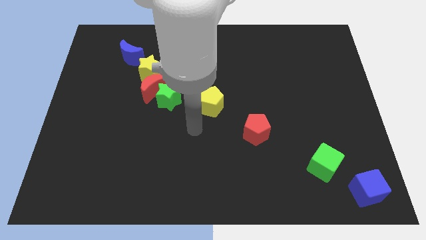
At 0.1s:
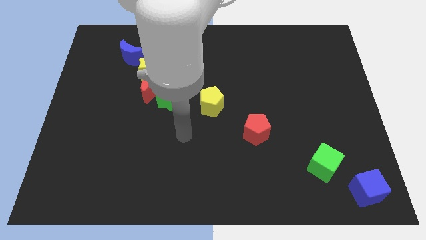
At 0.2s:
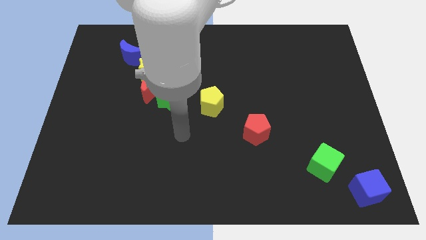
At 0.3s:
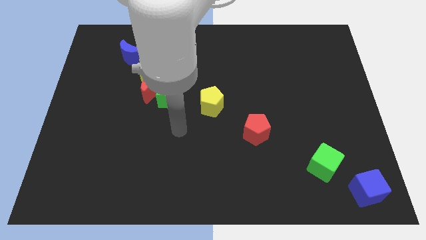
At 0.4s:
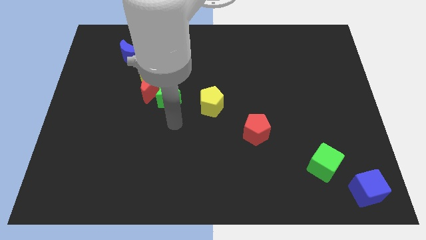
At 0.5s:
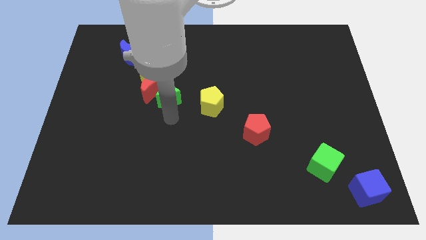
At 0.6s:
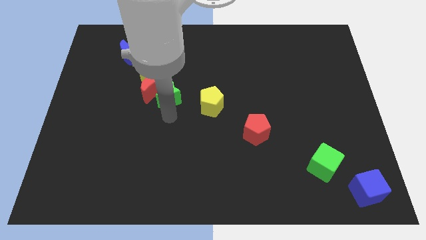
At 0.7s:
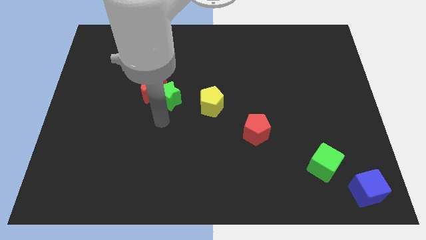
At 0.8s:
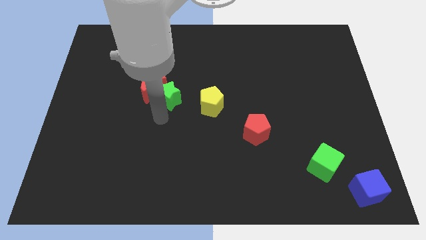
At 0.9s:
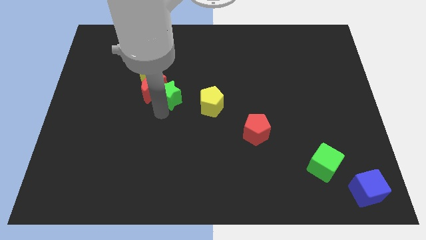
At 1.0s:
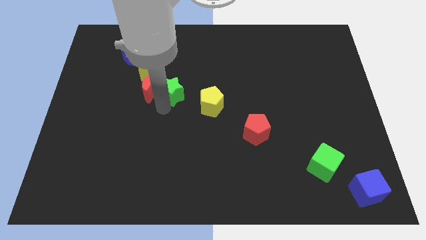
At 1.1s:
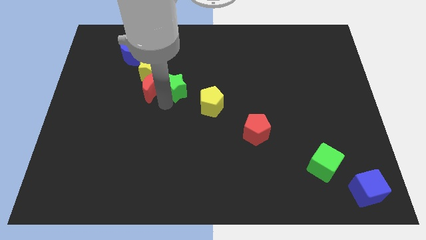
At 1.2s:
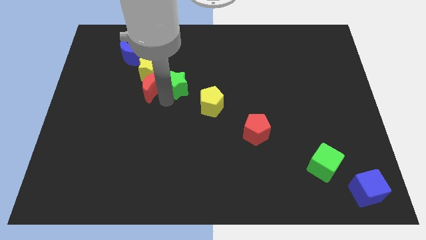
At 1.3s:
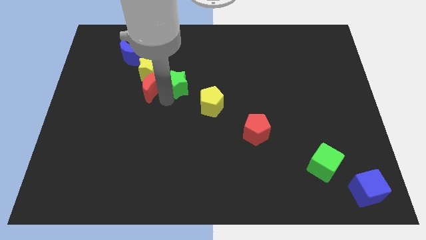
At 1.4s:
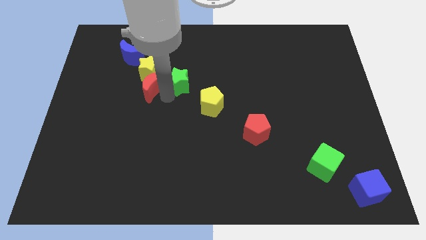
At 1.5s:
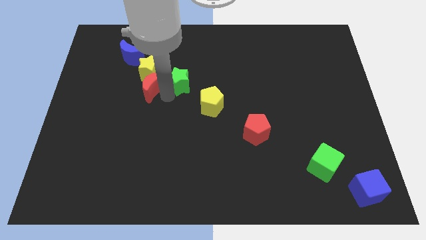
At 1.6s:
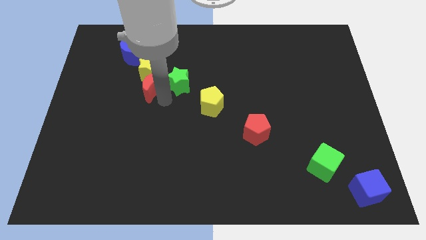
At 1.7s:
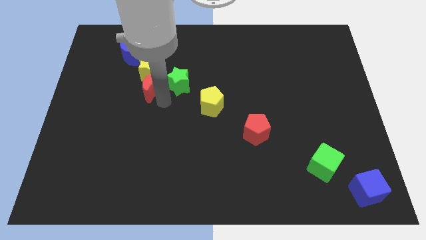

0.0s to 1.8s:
separate the green star from the red moon

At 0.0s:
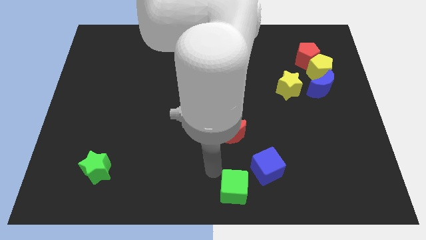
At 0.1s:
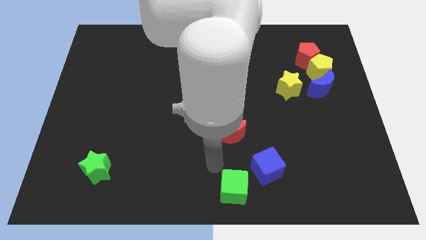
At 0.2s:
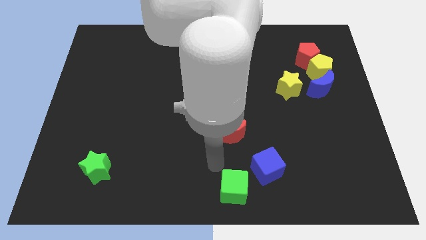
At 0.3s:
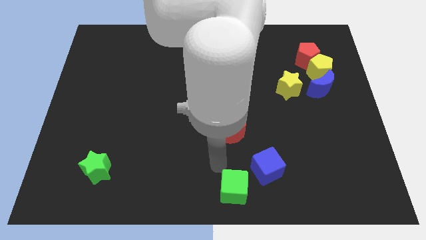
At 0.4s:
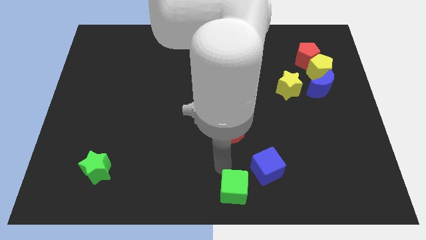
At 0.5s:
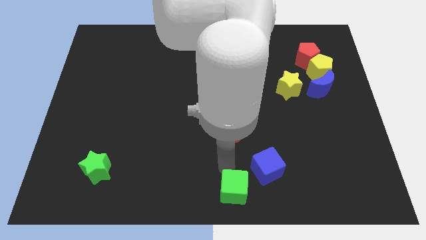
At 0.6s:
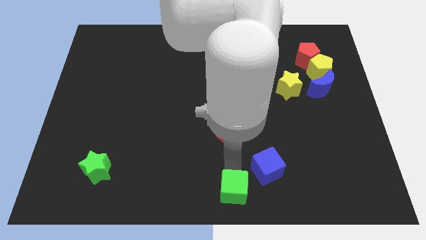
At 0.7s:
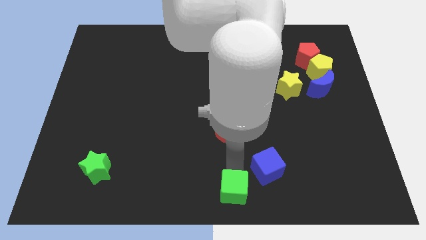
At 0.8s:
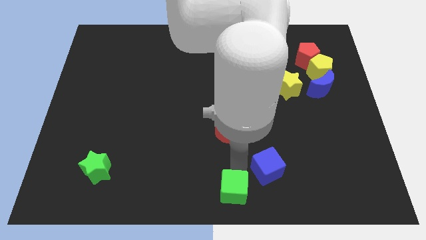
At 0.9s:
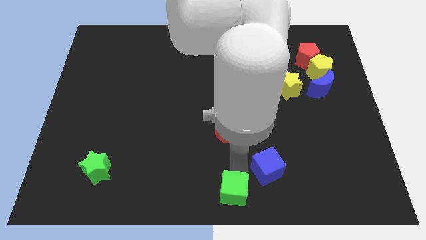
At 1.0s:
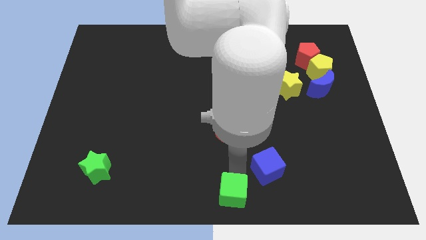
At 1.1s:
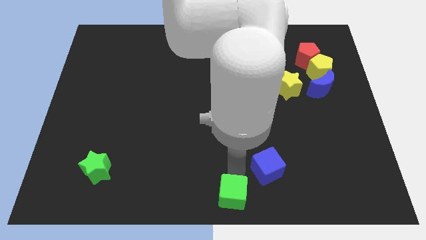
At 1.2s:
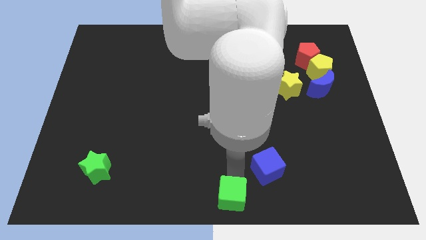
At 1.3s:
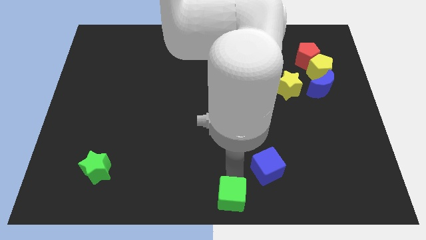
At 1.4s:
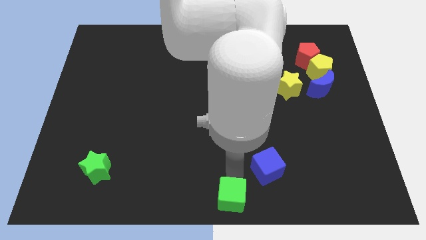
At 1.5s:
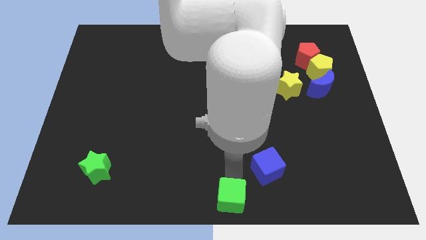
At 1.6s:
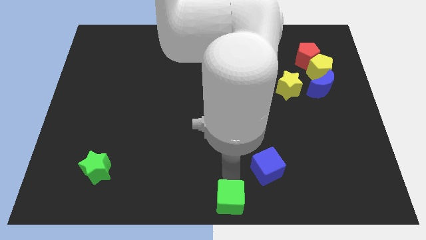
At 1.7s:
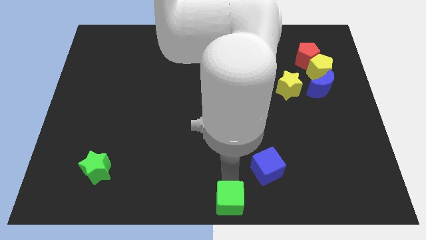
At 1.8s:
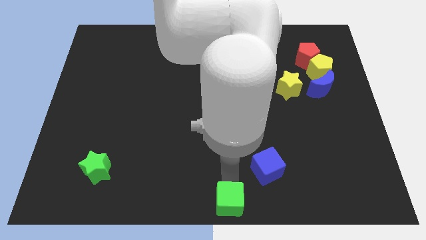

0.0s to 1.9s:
move the green cube to the middle of the board

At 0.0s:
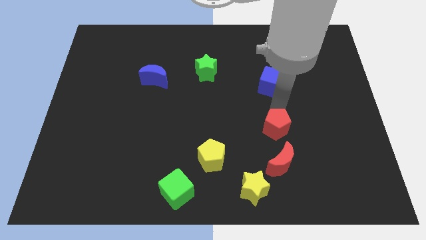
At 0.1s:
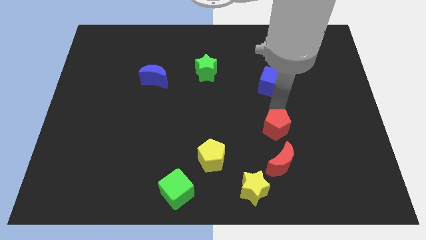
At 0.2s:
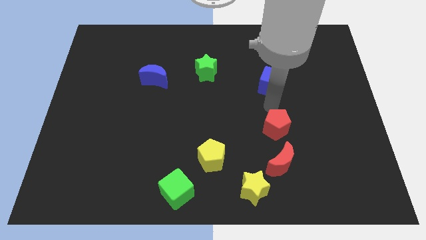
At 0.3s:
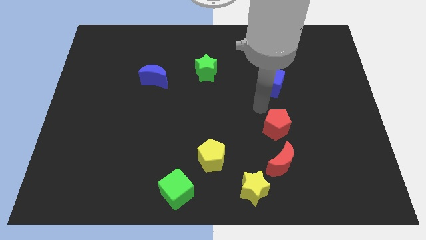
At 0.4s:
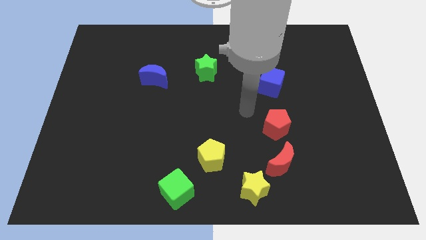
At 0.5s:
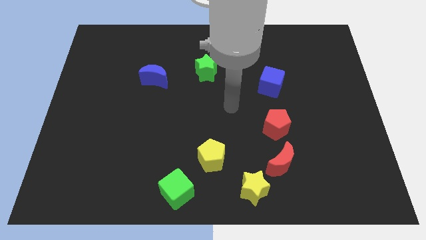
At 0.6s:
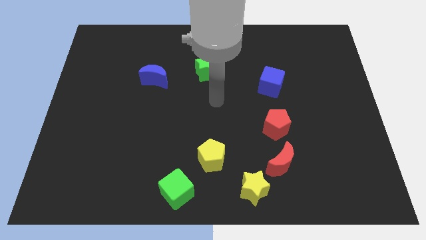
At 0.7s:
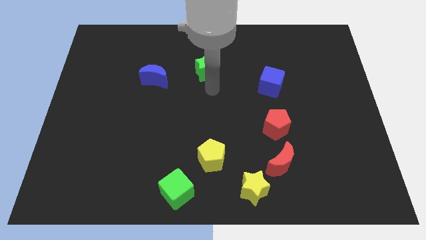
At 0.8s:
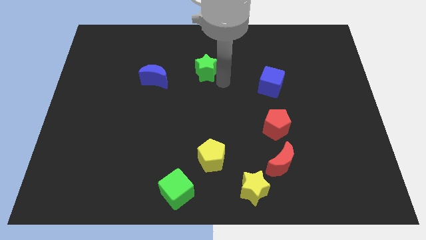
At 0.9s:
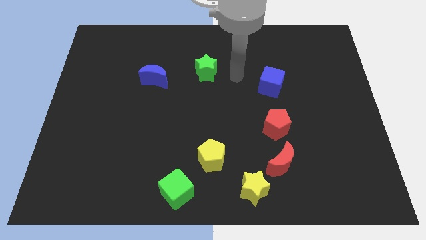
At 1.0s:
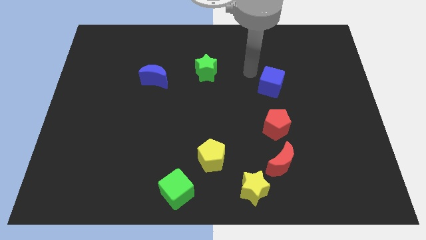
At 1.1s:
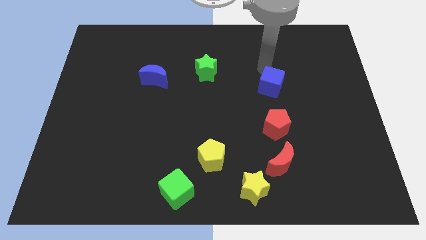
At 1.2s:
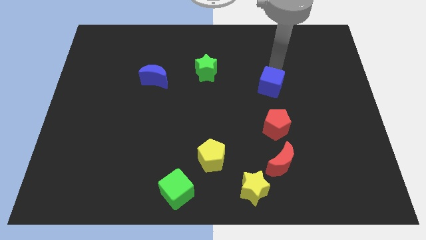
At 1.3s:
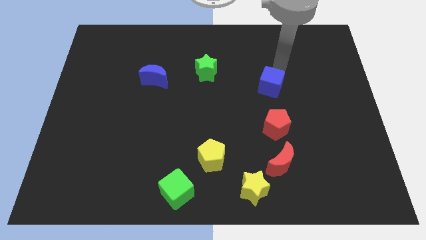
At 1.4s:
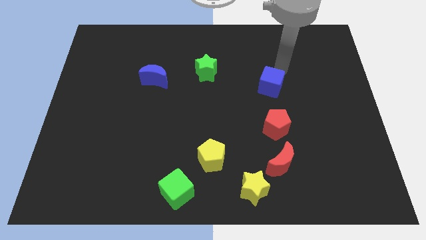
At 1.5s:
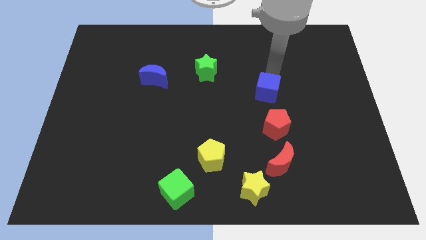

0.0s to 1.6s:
move your arm to the blue cube

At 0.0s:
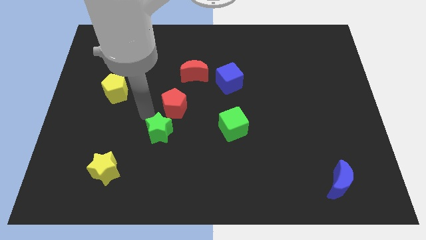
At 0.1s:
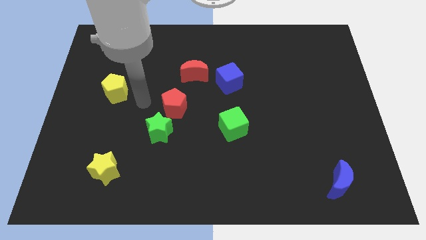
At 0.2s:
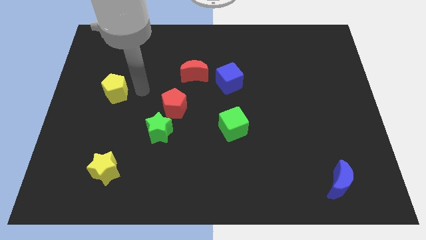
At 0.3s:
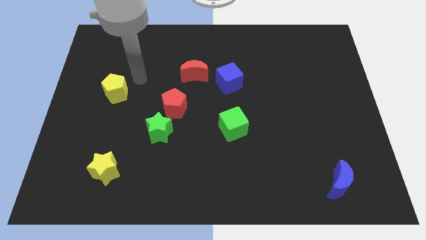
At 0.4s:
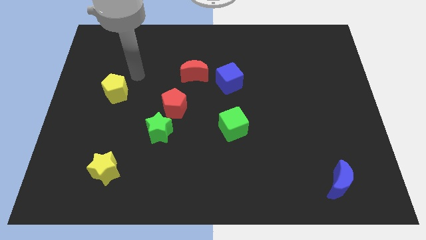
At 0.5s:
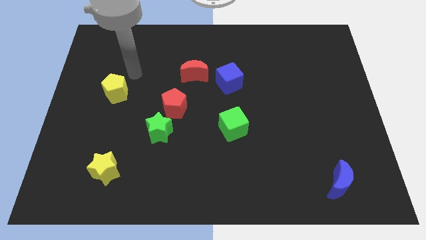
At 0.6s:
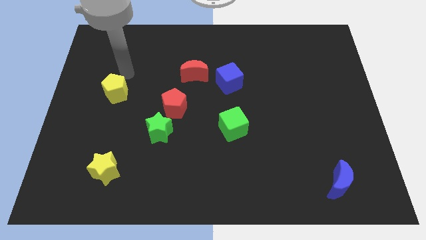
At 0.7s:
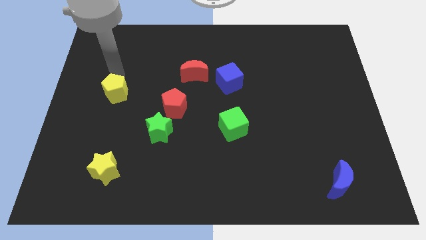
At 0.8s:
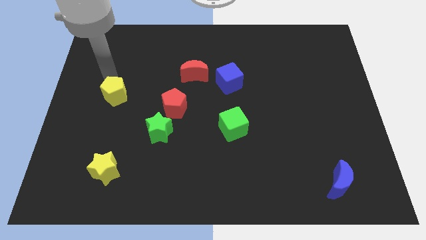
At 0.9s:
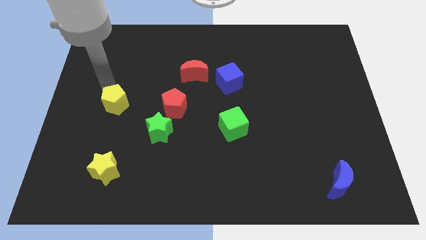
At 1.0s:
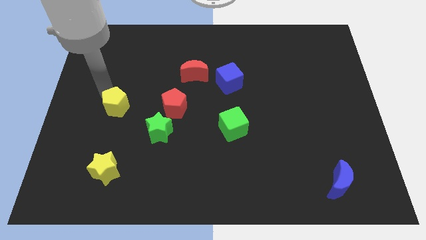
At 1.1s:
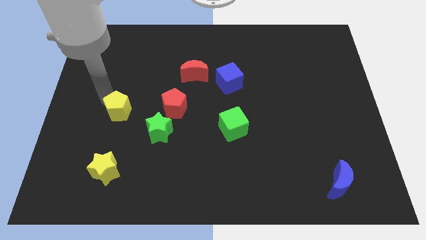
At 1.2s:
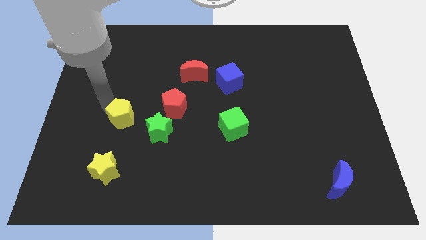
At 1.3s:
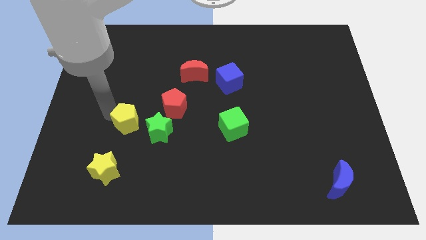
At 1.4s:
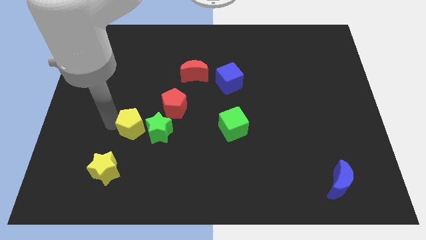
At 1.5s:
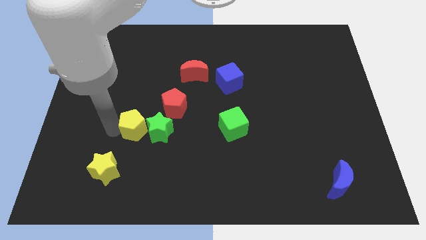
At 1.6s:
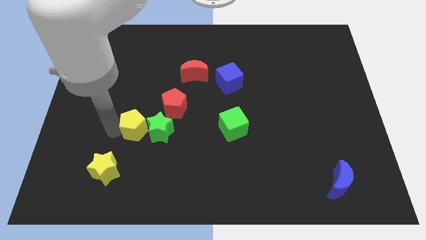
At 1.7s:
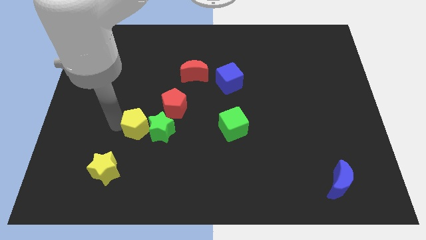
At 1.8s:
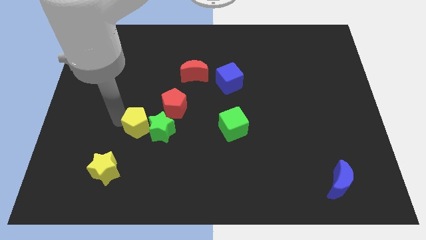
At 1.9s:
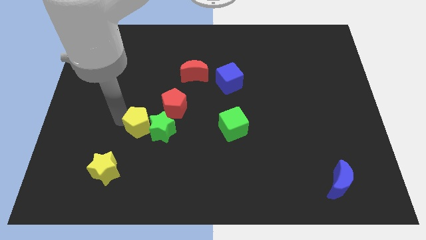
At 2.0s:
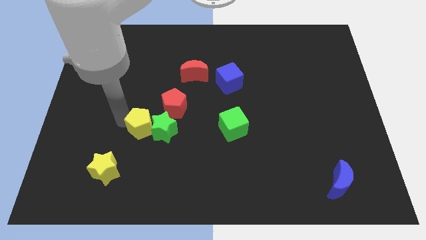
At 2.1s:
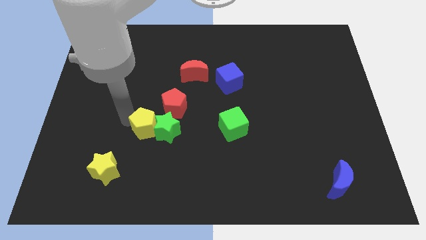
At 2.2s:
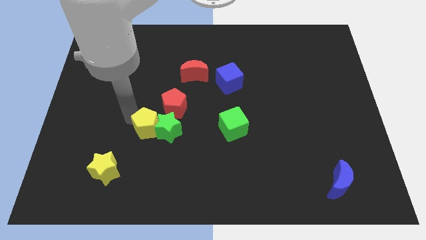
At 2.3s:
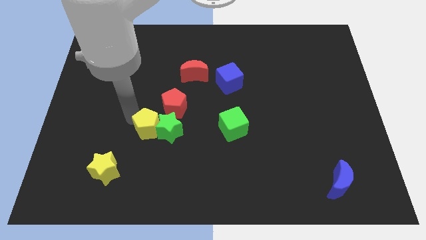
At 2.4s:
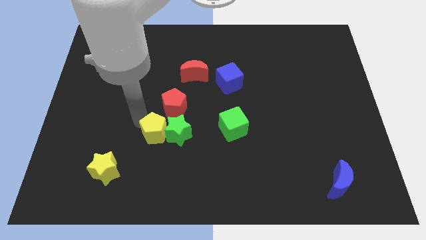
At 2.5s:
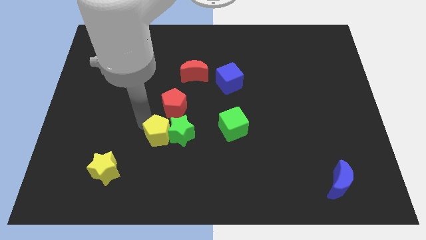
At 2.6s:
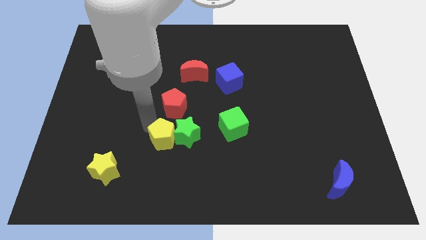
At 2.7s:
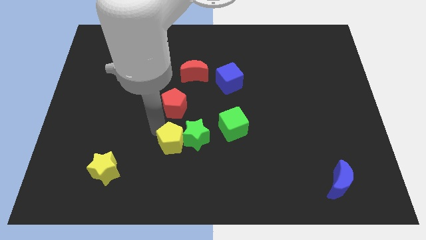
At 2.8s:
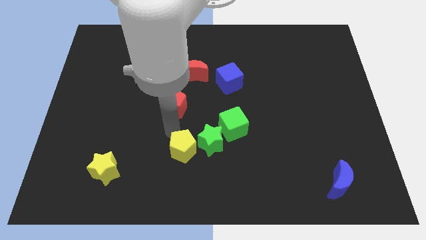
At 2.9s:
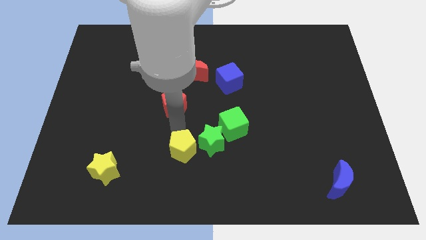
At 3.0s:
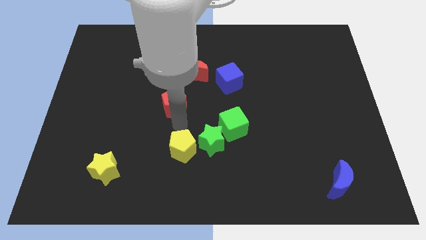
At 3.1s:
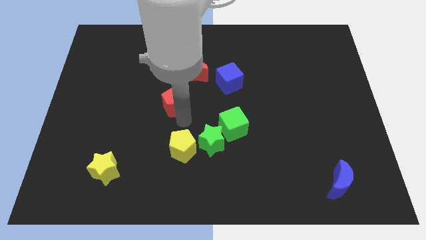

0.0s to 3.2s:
put the yellow pentagon on the left of the green star

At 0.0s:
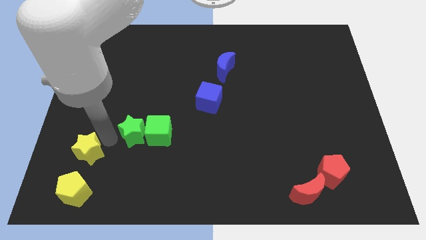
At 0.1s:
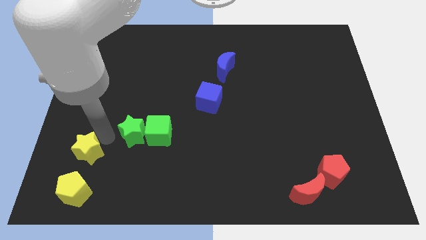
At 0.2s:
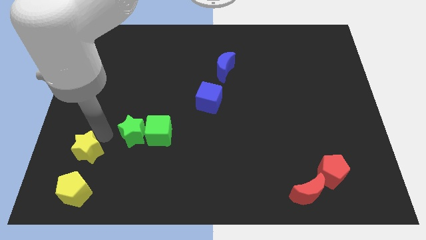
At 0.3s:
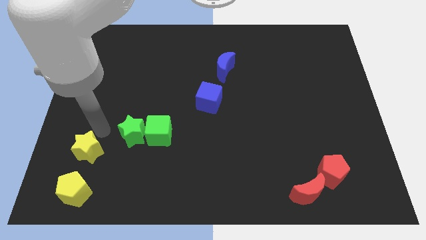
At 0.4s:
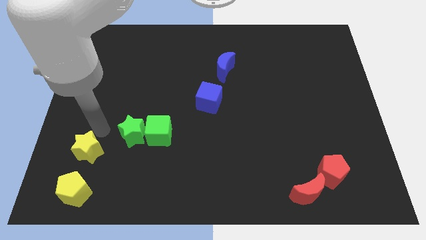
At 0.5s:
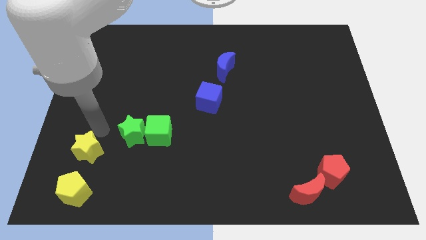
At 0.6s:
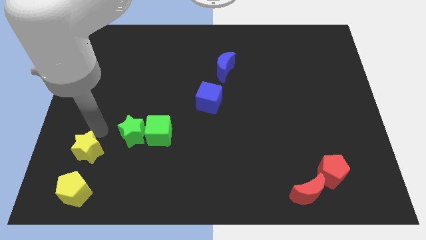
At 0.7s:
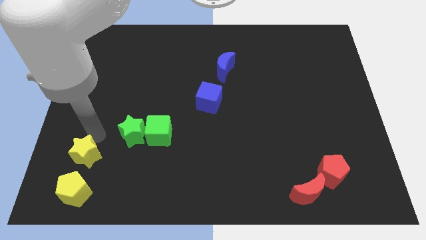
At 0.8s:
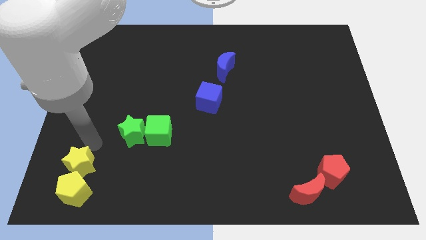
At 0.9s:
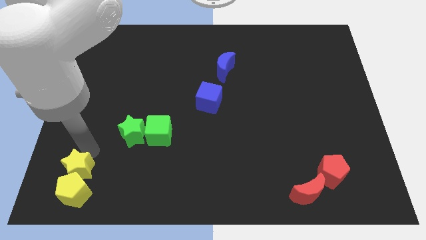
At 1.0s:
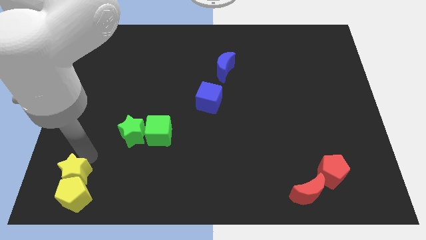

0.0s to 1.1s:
push the yellow star into the yellow pentagon
